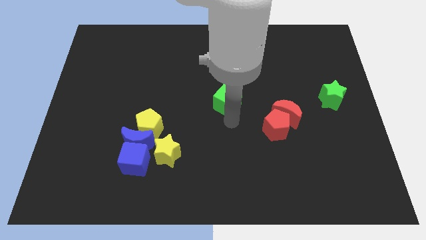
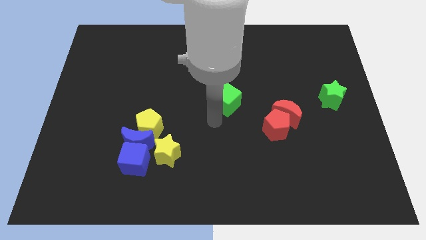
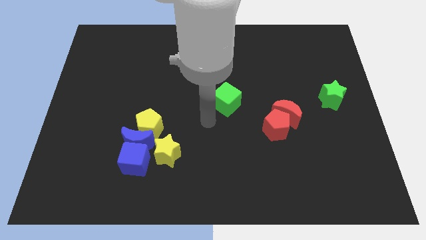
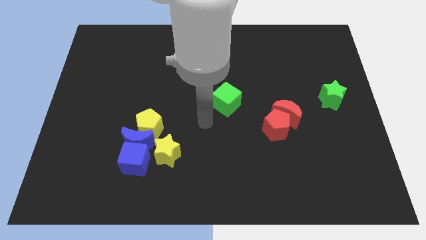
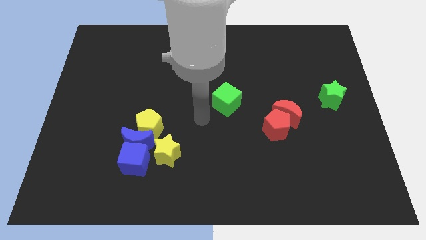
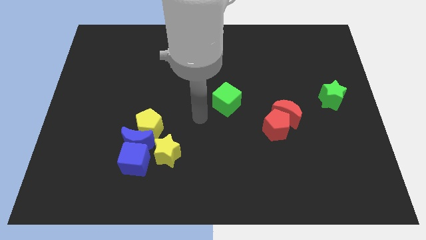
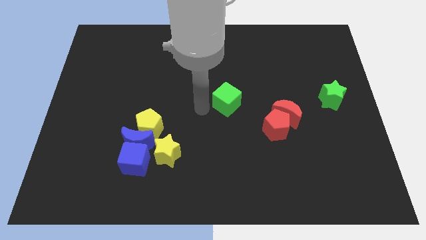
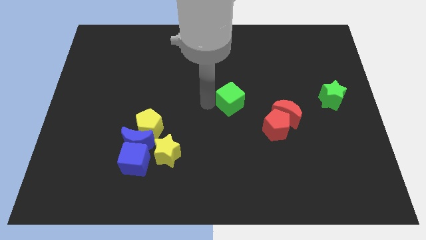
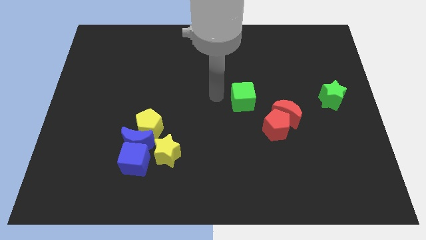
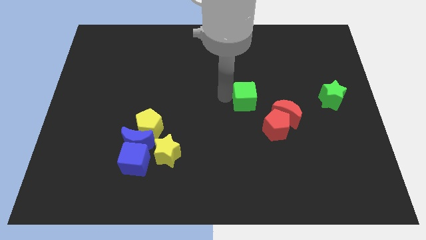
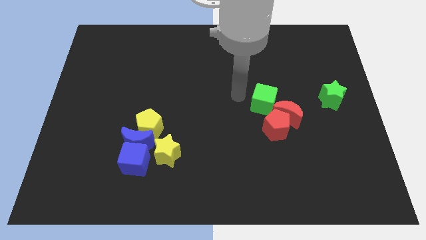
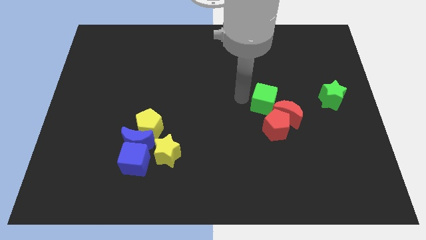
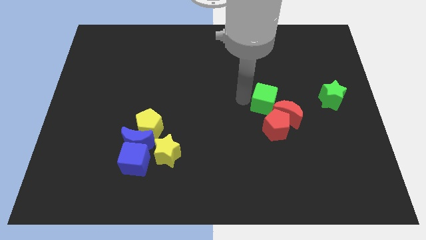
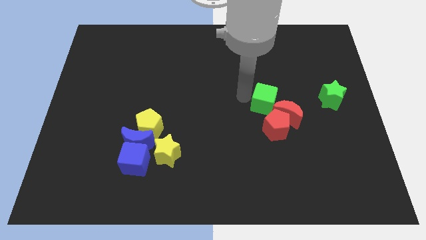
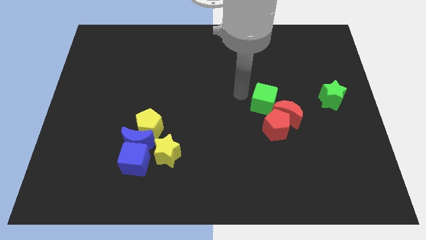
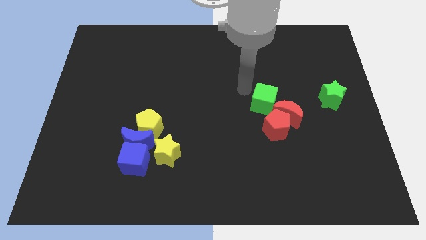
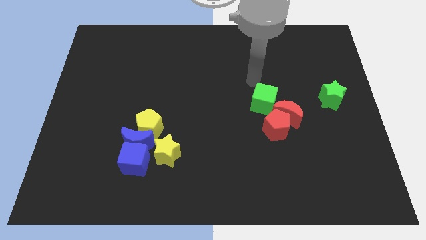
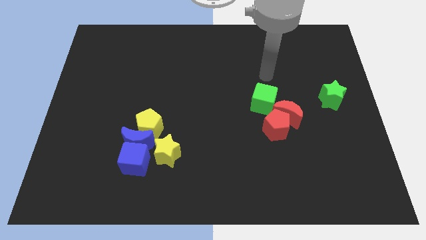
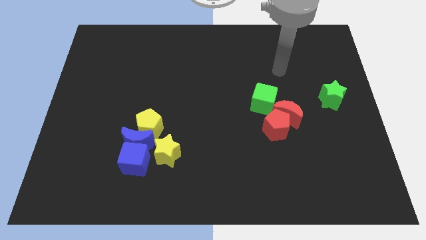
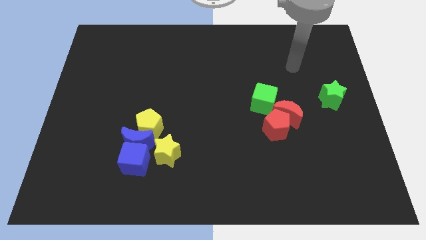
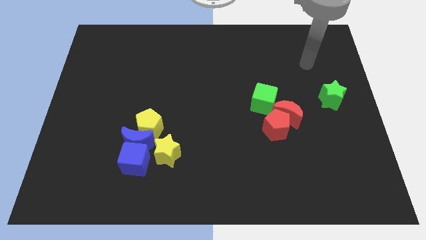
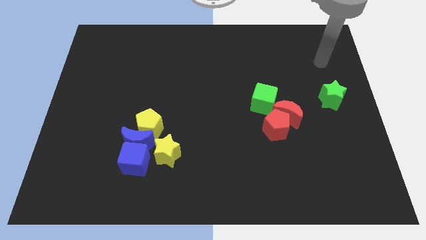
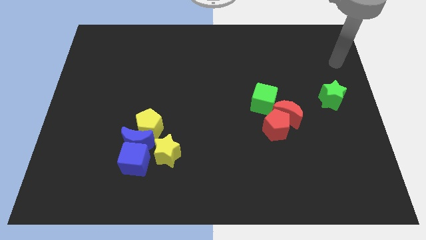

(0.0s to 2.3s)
move the green cube close to the red blocks

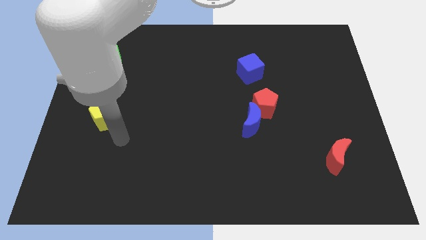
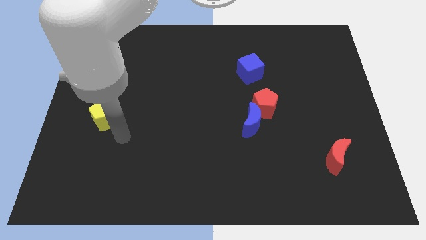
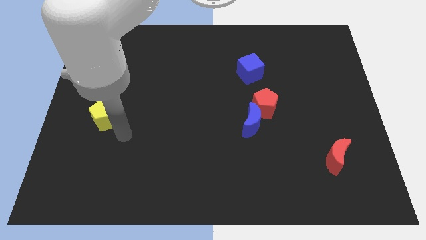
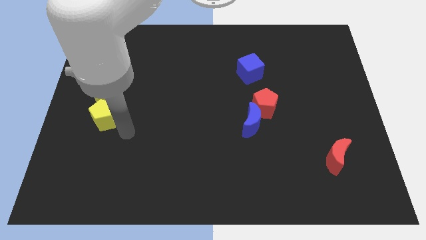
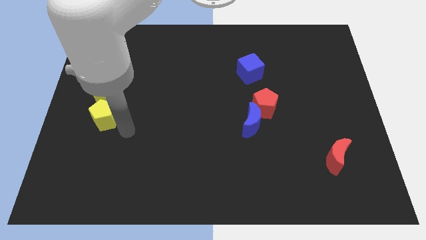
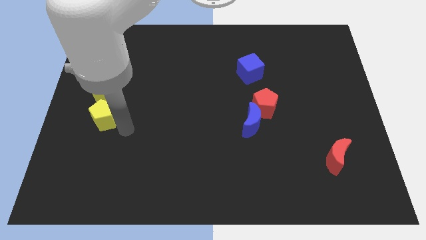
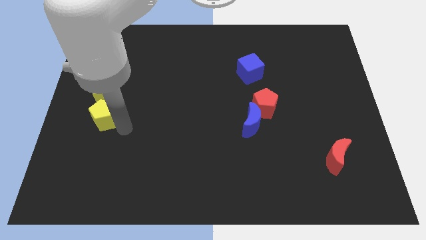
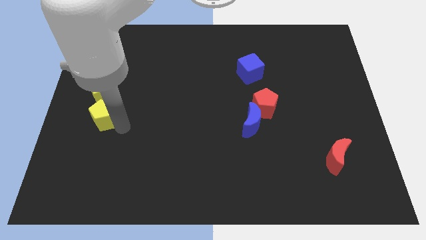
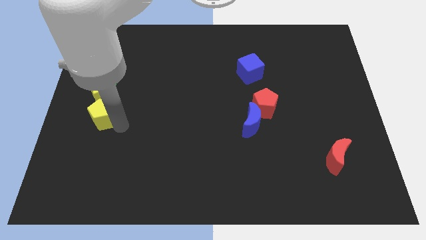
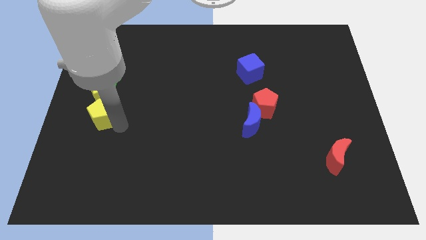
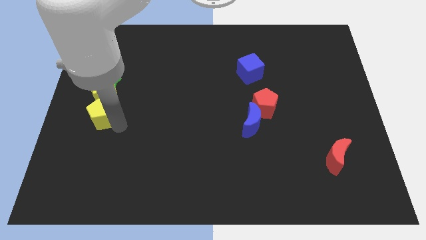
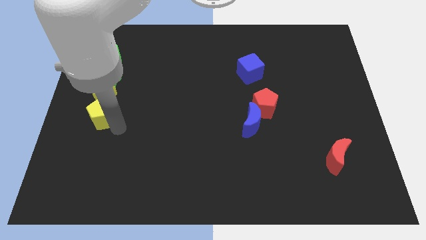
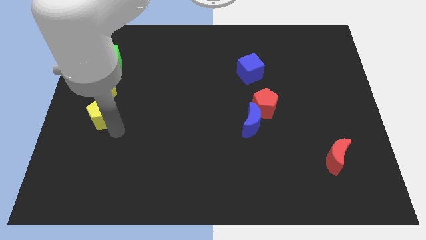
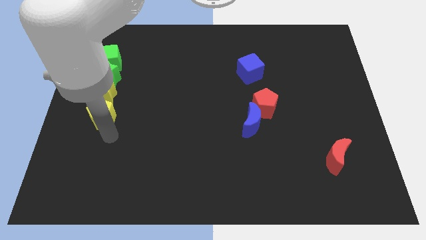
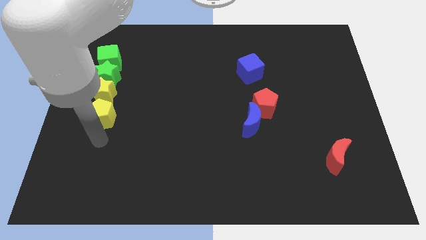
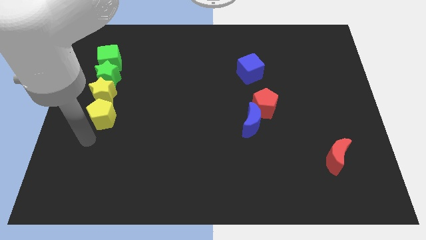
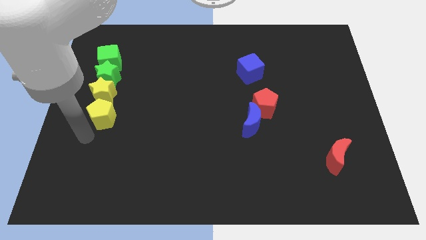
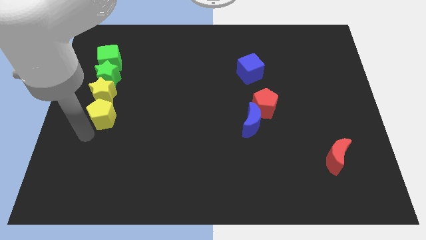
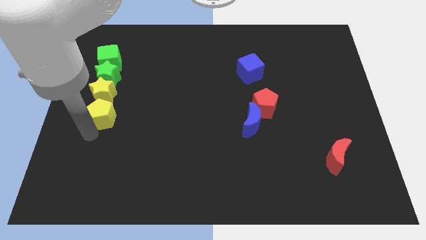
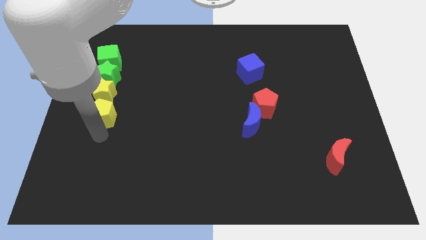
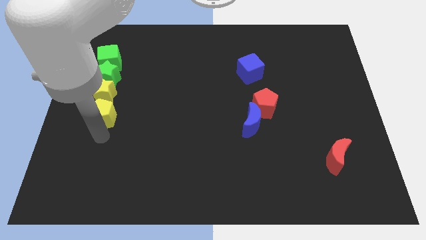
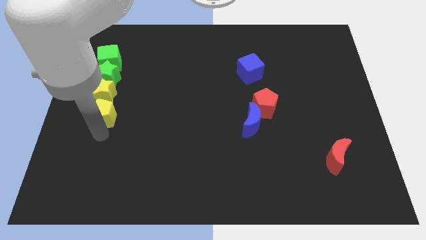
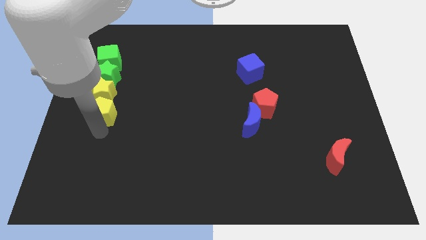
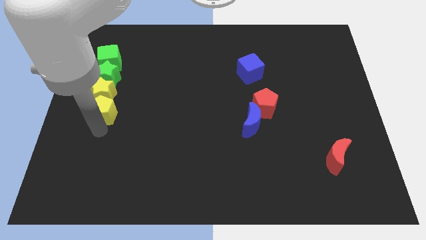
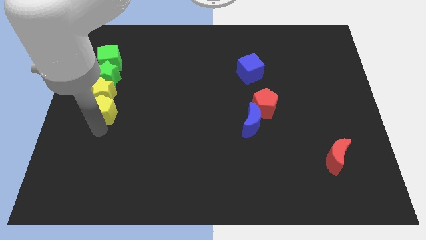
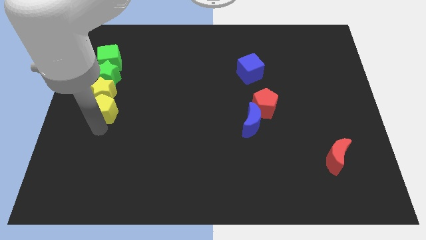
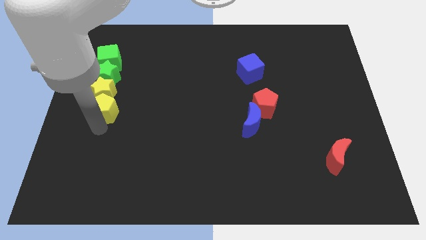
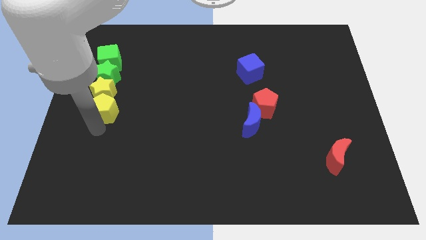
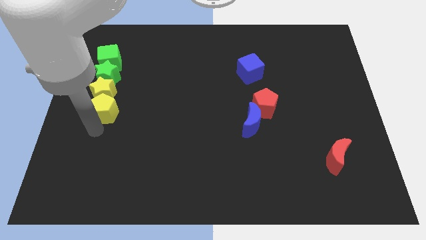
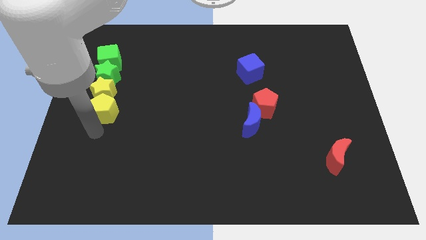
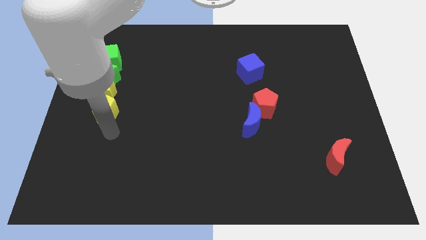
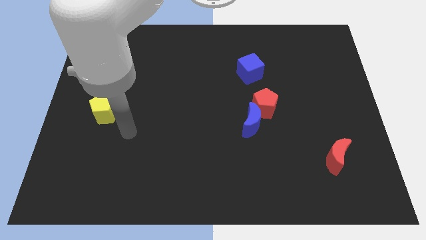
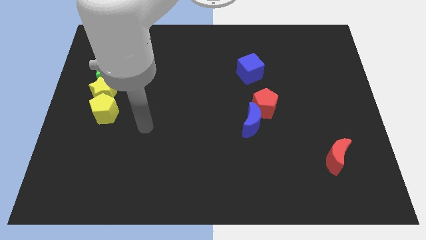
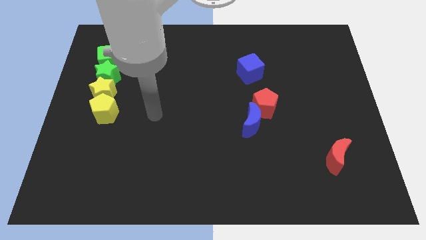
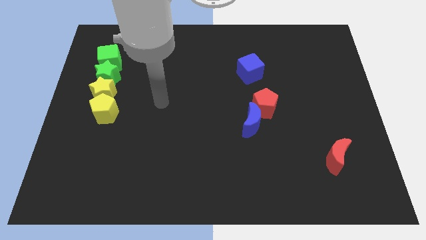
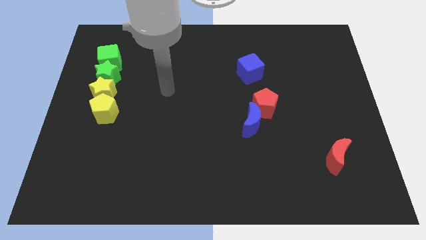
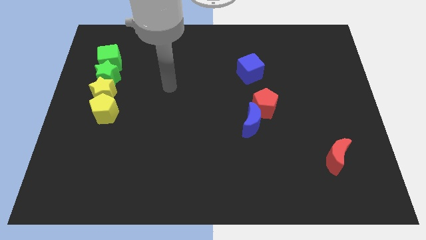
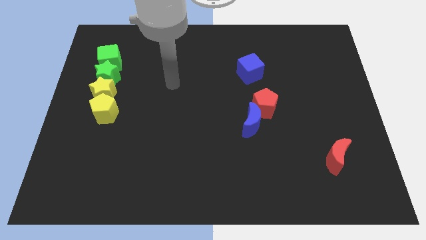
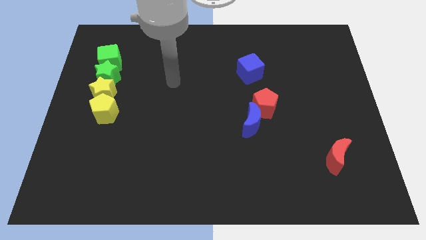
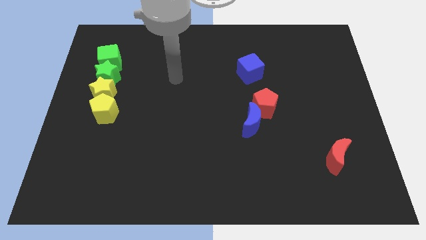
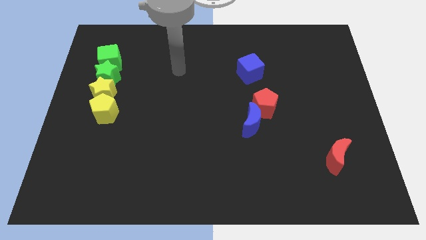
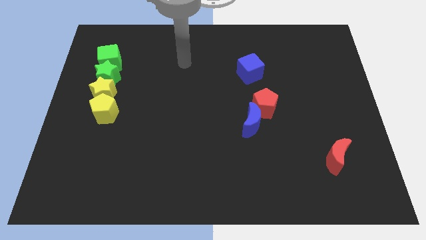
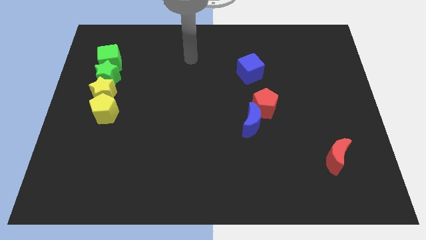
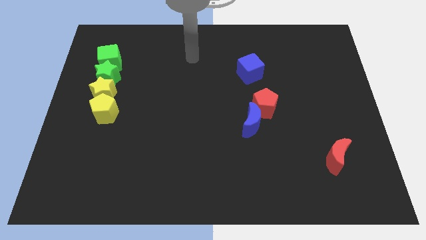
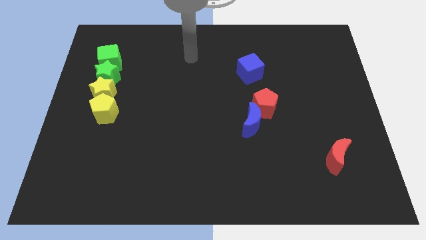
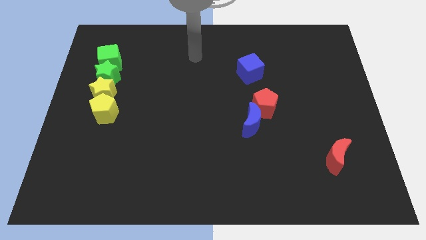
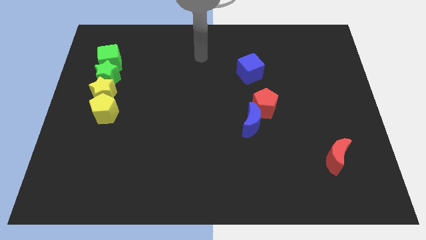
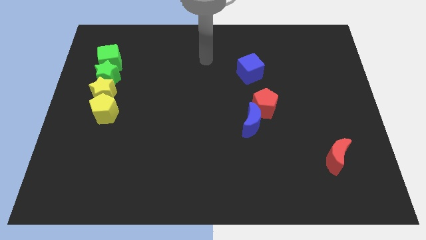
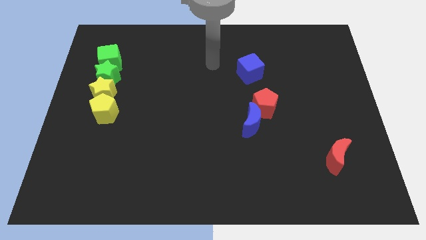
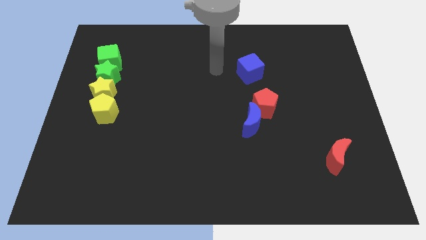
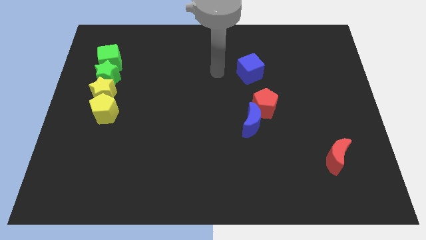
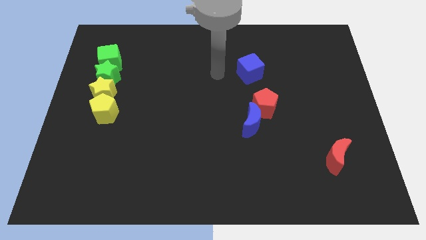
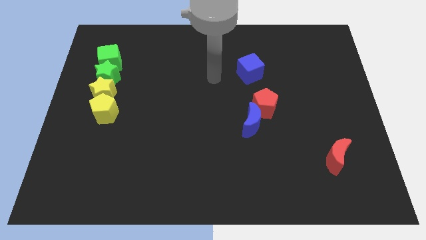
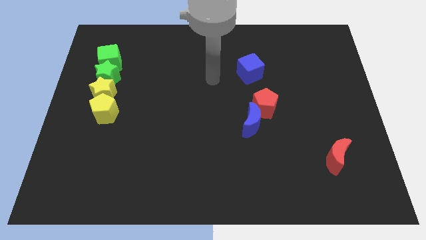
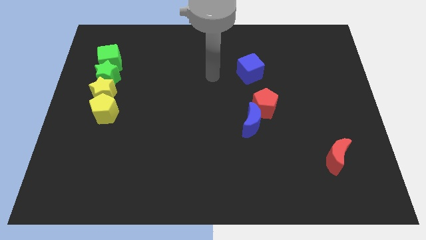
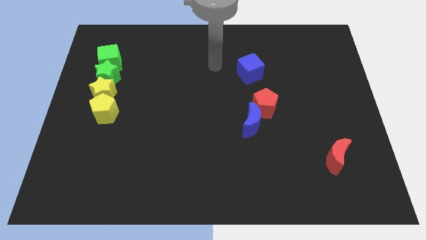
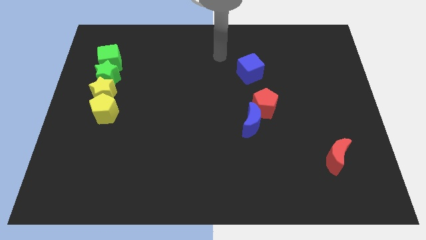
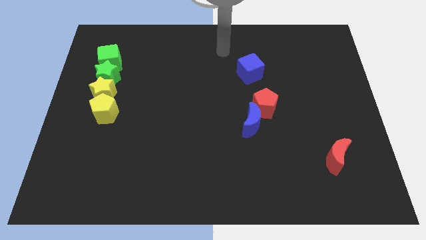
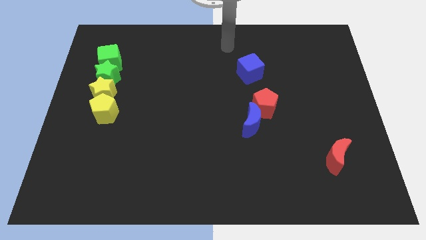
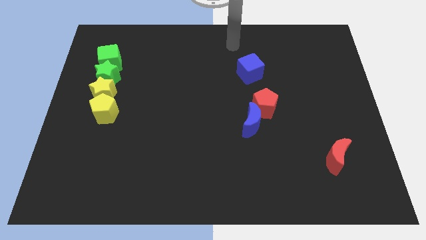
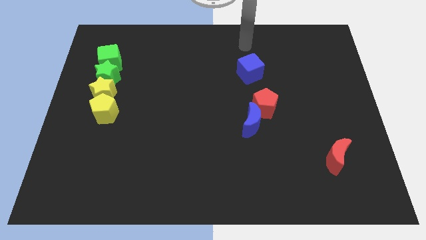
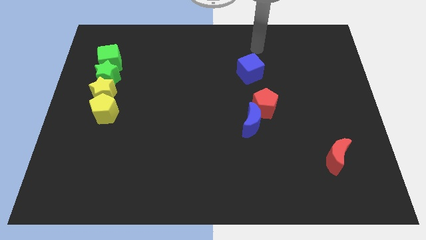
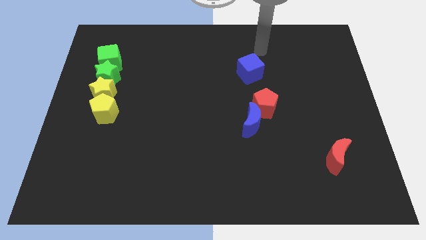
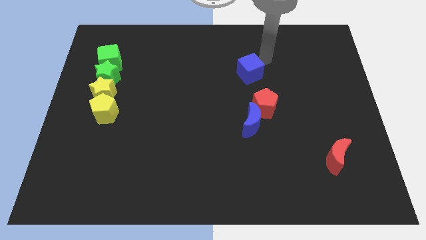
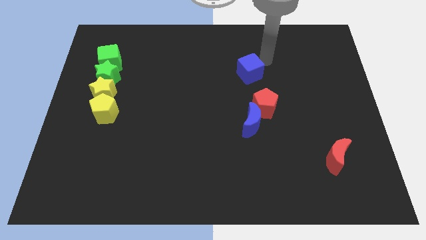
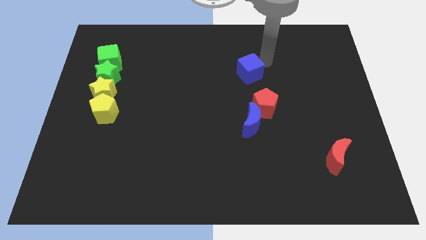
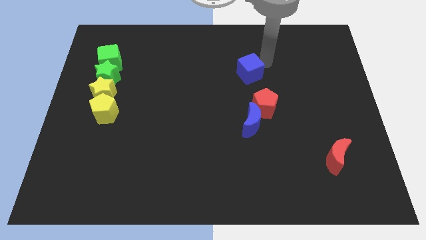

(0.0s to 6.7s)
move your arm to the right of blue cube
